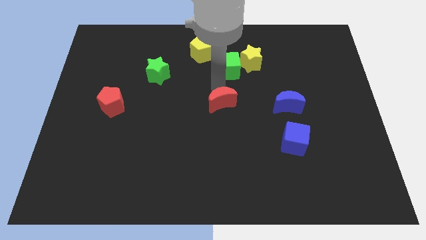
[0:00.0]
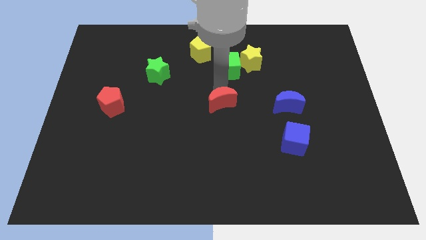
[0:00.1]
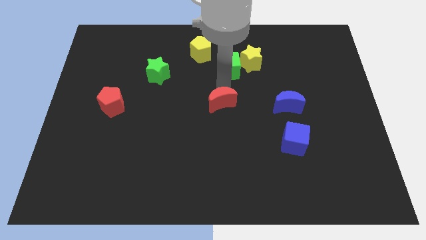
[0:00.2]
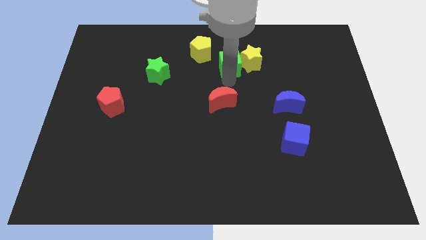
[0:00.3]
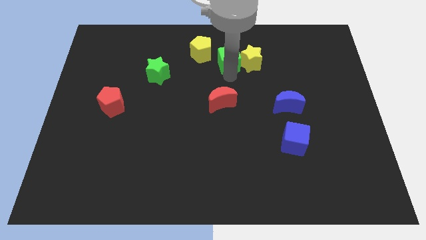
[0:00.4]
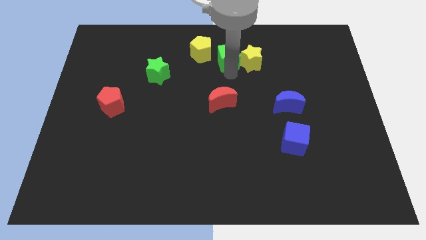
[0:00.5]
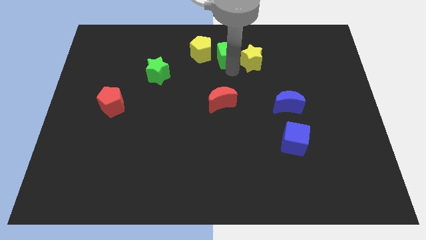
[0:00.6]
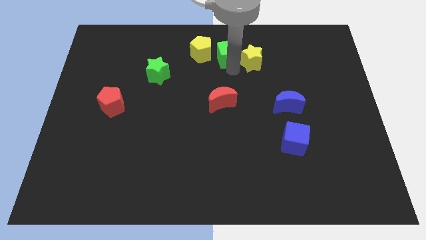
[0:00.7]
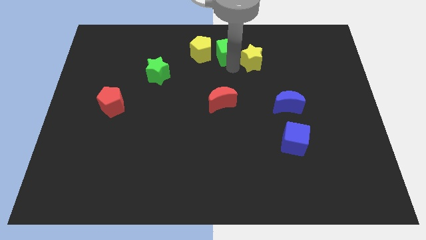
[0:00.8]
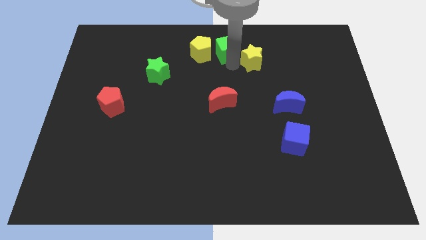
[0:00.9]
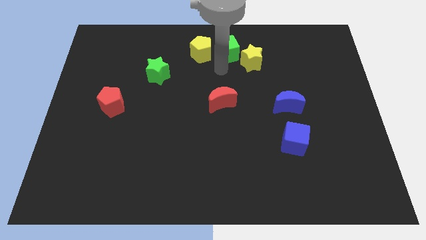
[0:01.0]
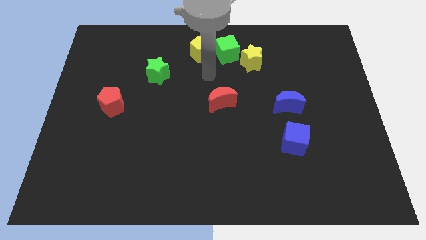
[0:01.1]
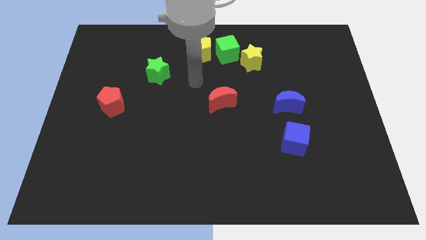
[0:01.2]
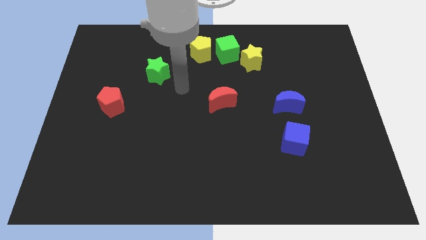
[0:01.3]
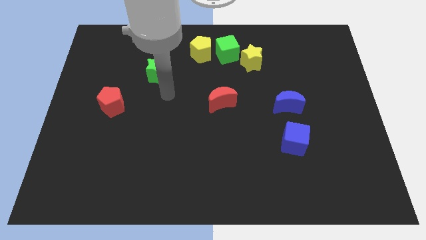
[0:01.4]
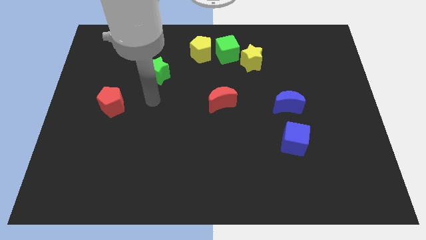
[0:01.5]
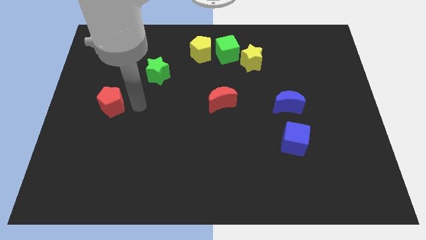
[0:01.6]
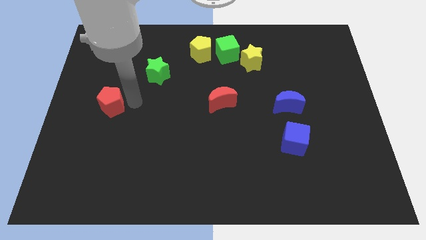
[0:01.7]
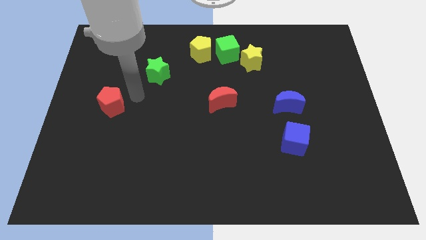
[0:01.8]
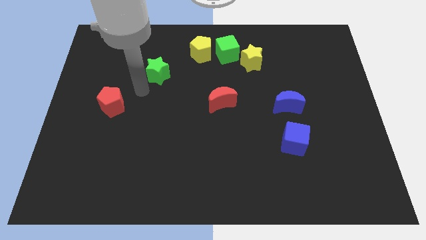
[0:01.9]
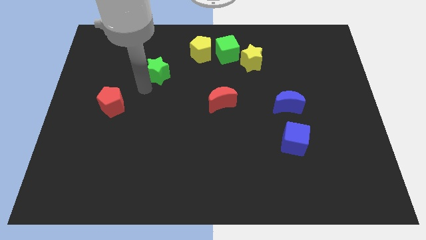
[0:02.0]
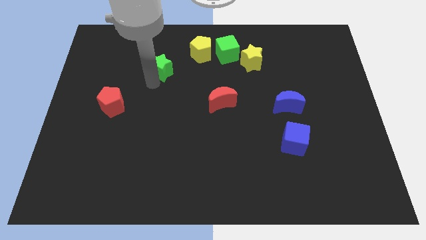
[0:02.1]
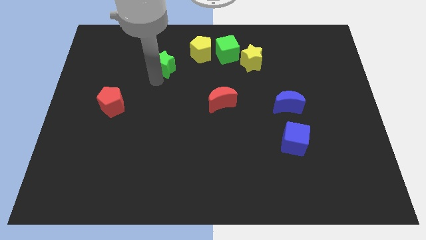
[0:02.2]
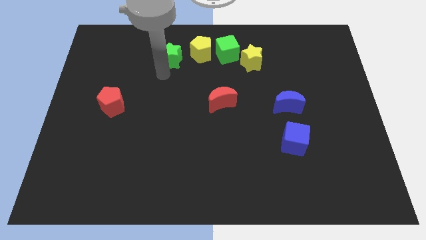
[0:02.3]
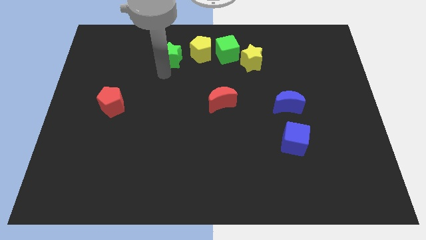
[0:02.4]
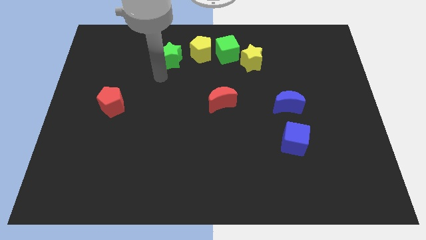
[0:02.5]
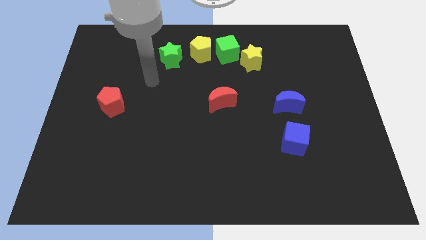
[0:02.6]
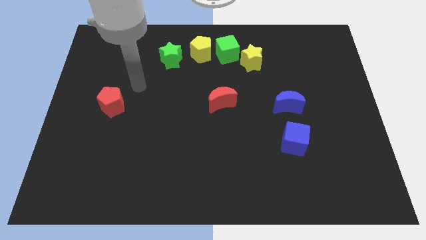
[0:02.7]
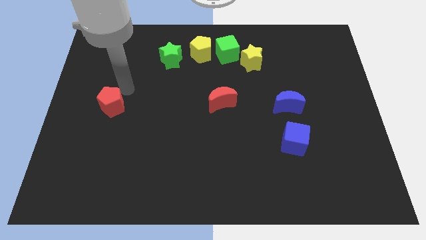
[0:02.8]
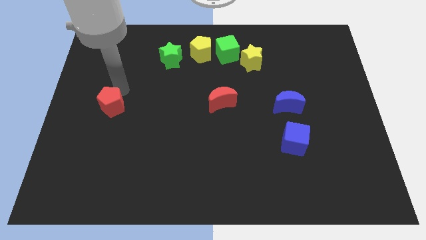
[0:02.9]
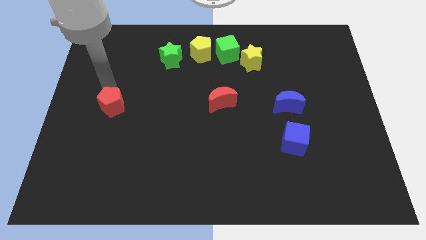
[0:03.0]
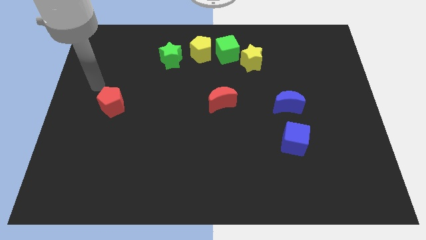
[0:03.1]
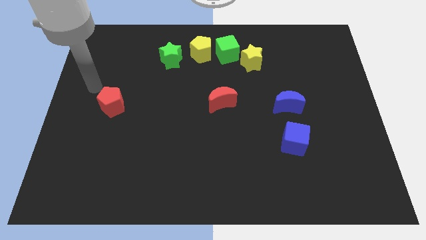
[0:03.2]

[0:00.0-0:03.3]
place yellow and green blocks in a horizontal line

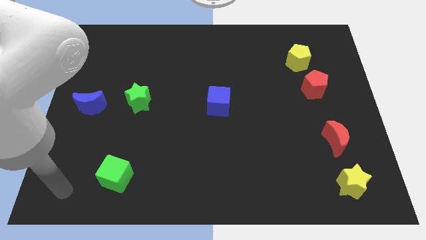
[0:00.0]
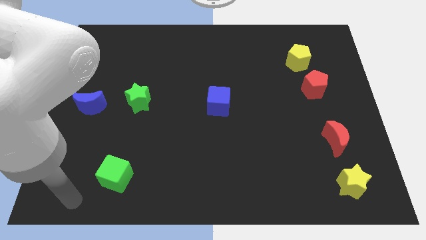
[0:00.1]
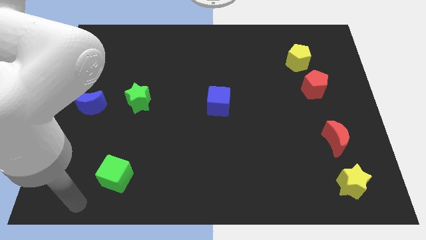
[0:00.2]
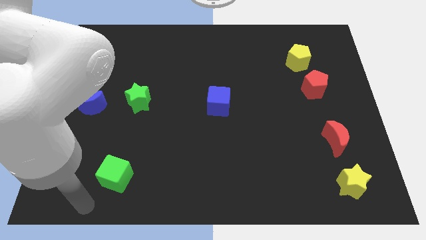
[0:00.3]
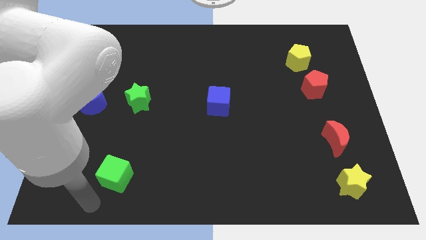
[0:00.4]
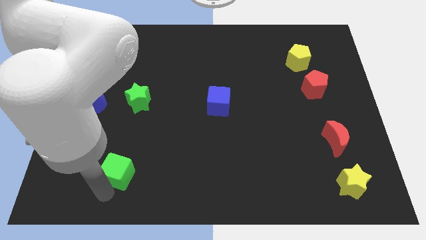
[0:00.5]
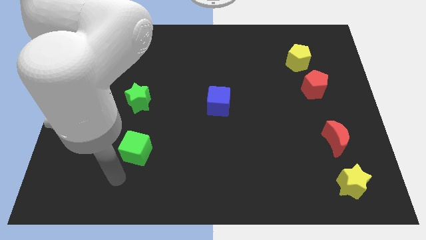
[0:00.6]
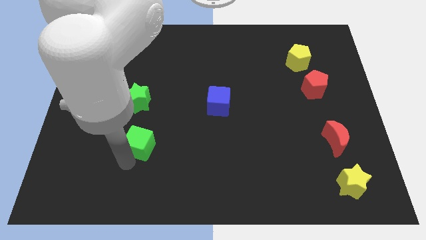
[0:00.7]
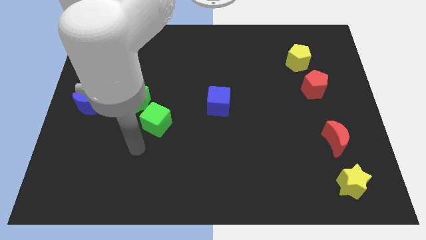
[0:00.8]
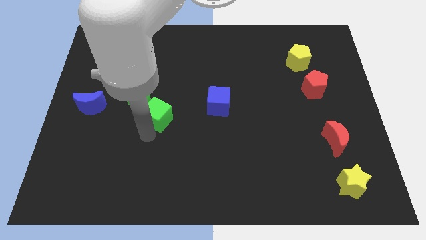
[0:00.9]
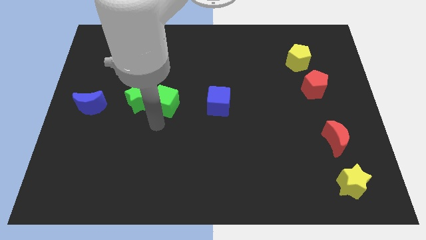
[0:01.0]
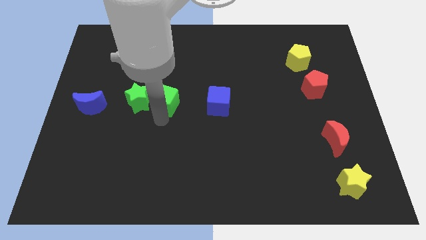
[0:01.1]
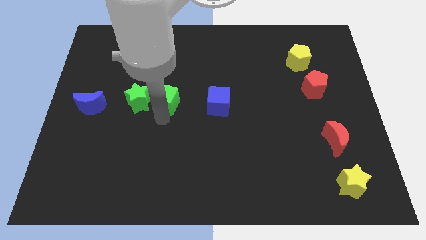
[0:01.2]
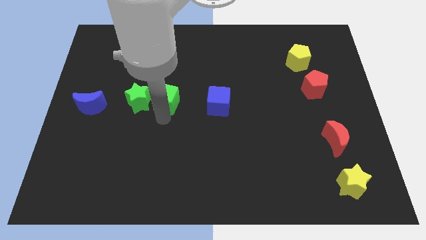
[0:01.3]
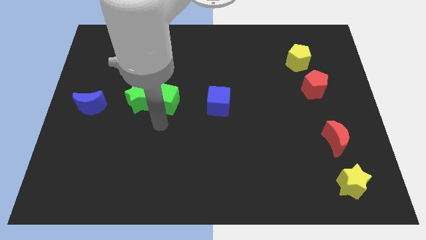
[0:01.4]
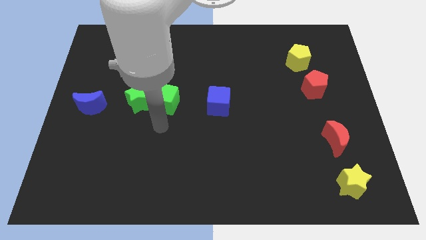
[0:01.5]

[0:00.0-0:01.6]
move the green cube in between the green star and blue cube

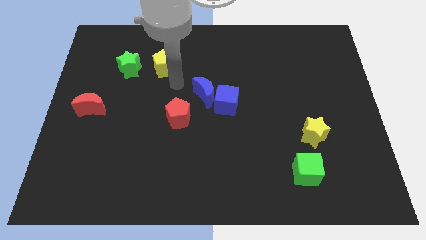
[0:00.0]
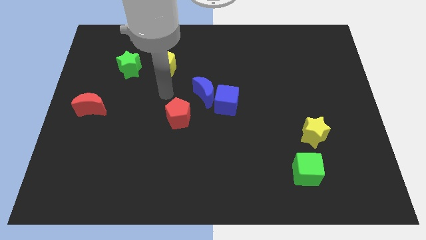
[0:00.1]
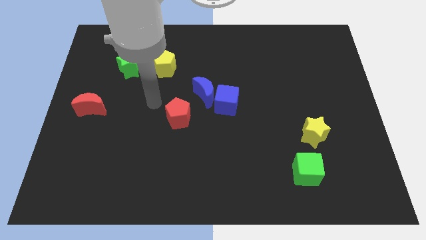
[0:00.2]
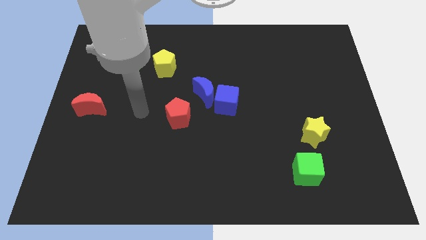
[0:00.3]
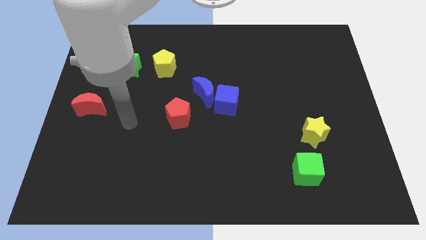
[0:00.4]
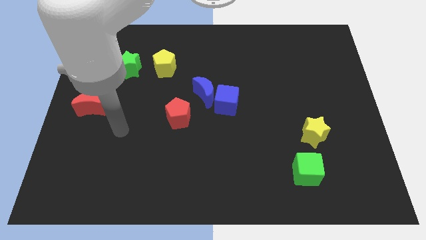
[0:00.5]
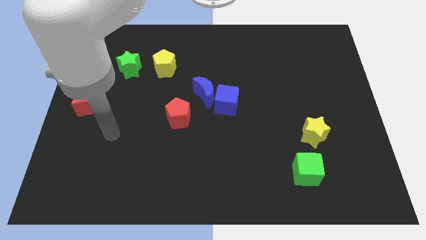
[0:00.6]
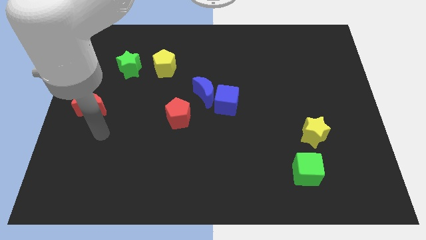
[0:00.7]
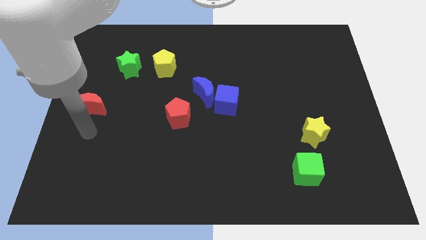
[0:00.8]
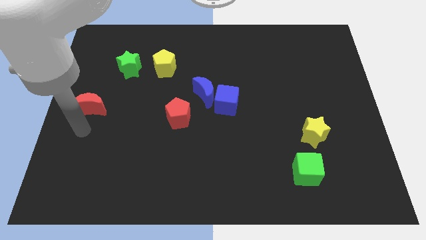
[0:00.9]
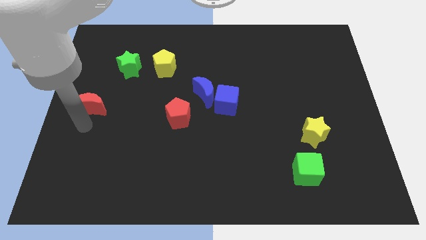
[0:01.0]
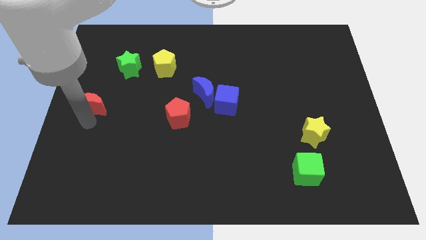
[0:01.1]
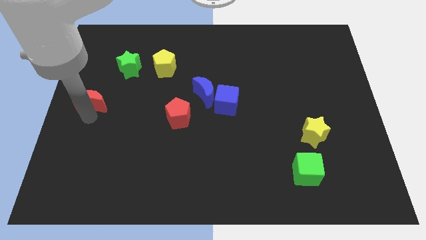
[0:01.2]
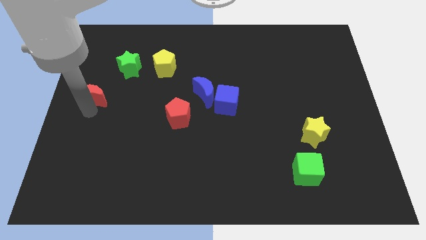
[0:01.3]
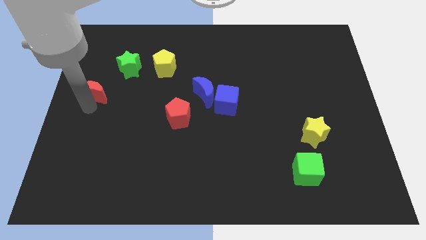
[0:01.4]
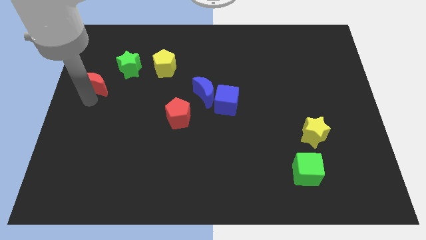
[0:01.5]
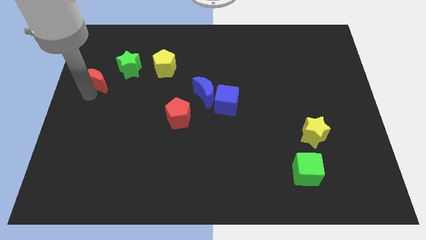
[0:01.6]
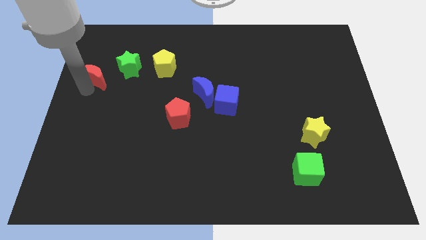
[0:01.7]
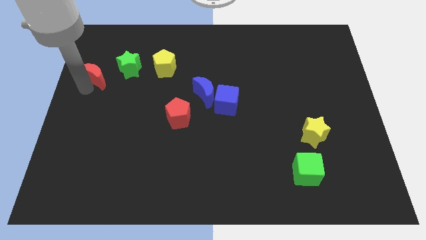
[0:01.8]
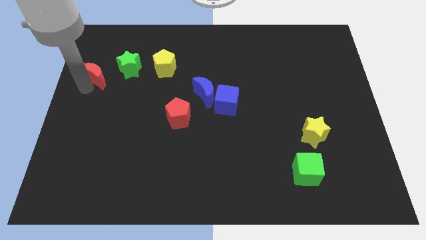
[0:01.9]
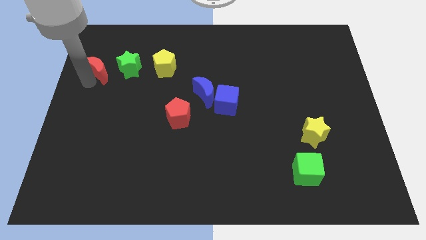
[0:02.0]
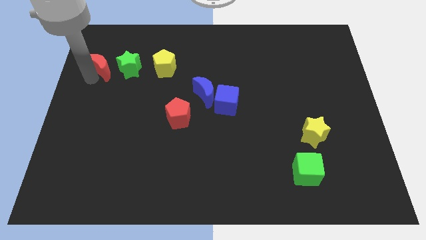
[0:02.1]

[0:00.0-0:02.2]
push red crescent beside green star

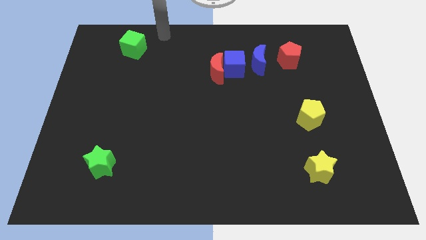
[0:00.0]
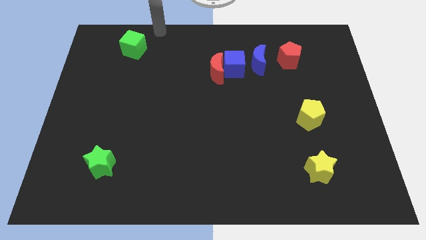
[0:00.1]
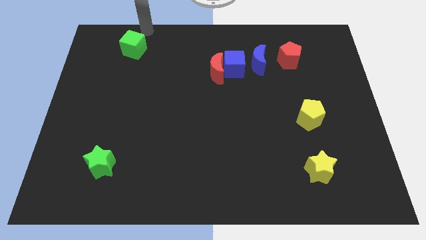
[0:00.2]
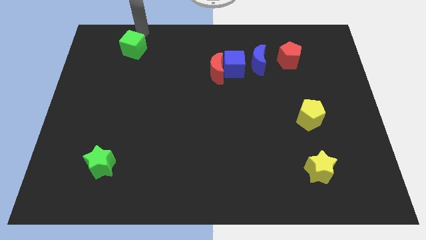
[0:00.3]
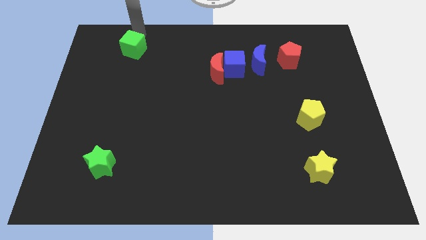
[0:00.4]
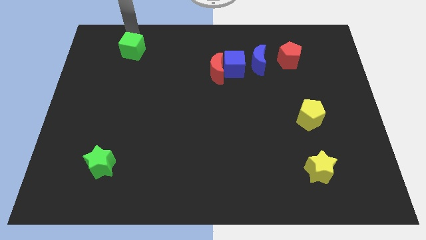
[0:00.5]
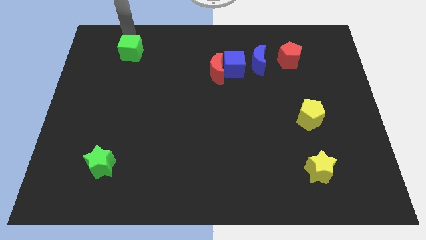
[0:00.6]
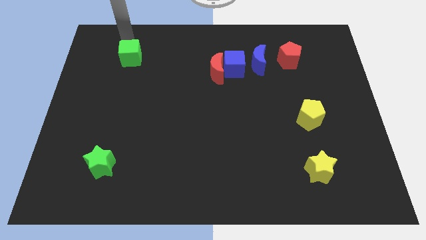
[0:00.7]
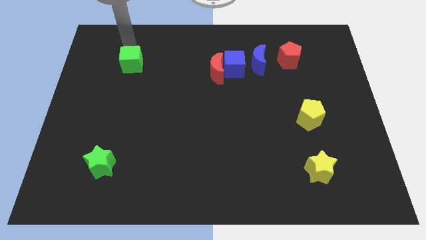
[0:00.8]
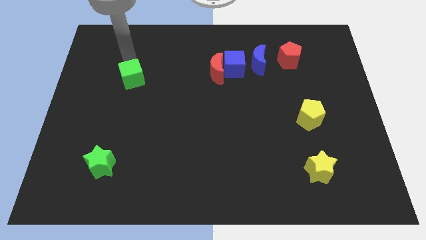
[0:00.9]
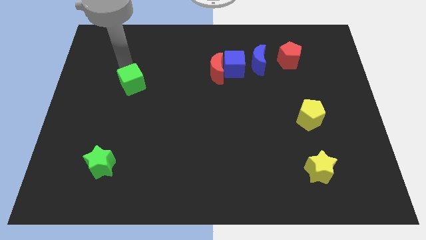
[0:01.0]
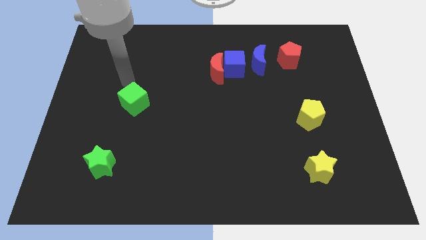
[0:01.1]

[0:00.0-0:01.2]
push the green cube slightly downwards of the board

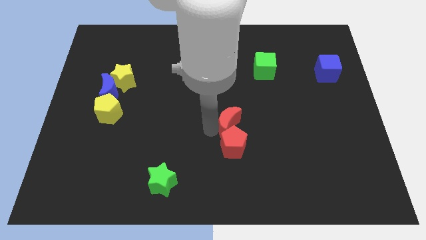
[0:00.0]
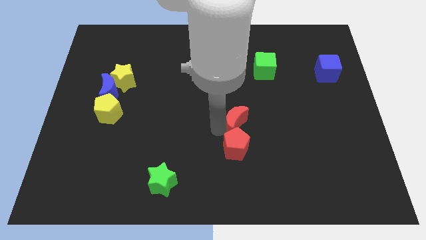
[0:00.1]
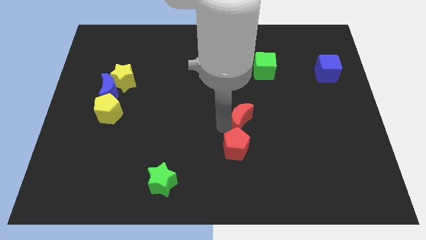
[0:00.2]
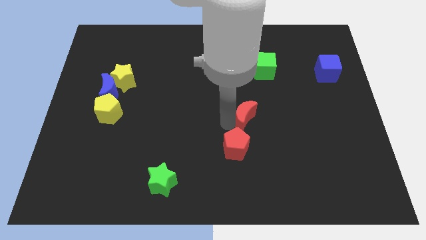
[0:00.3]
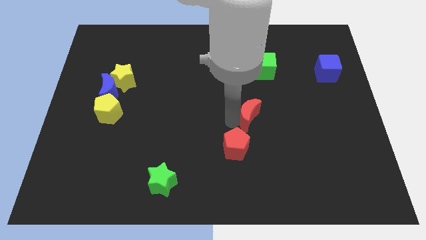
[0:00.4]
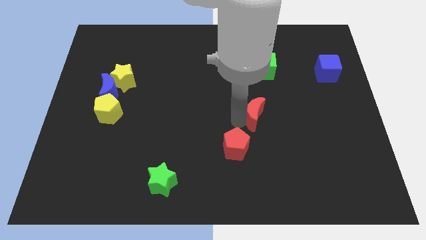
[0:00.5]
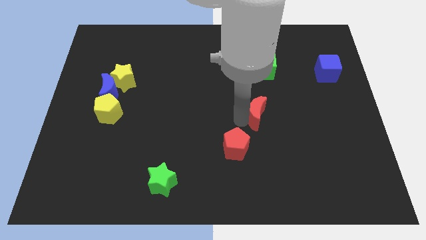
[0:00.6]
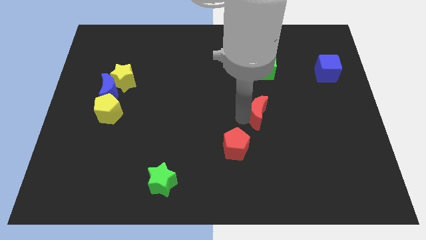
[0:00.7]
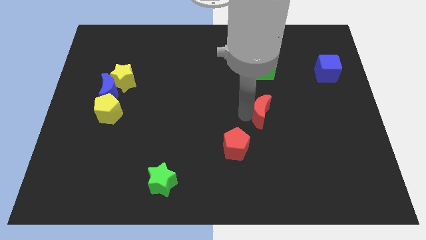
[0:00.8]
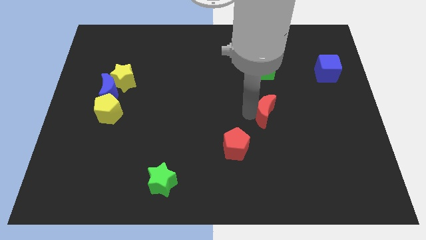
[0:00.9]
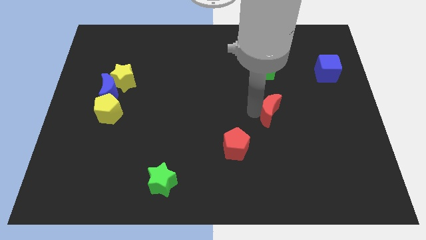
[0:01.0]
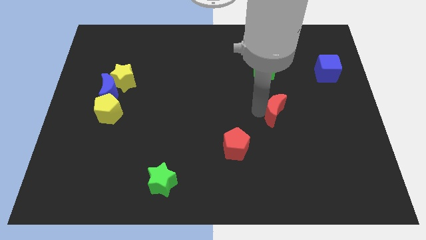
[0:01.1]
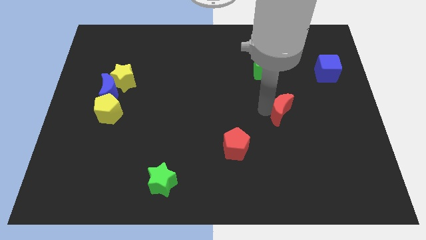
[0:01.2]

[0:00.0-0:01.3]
move the red crescent in between the blue cube and the red pentagon
